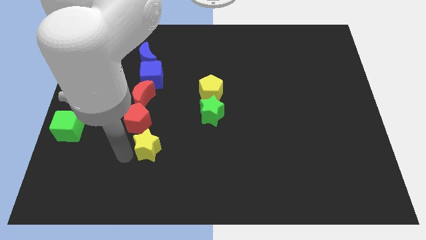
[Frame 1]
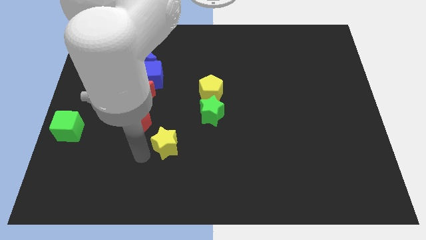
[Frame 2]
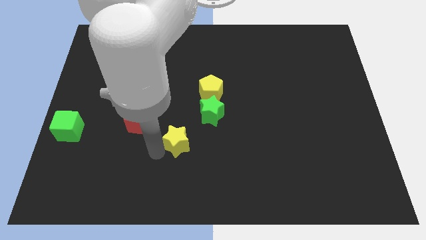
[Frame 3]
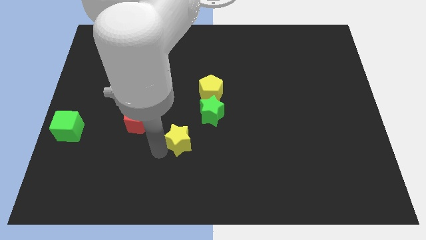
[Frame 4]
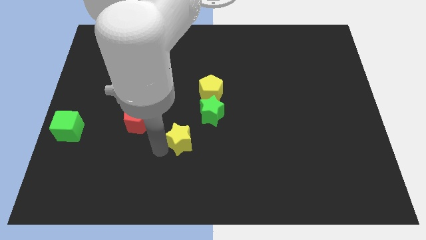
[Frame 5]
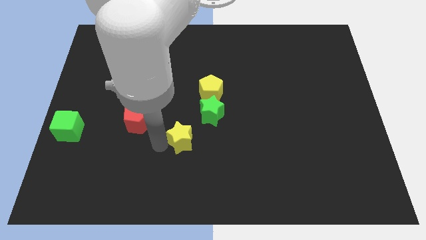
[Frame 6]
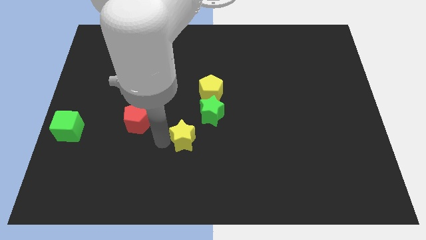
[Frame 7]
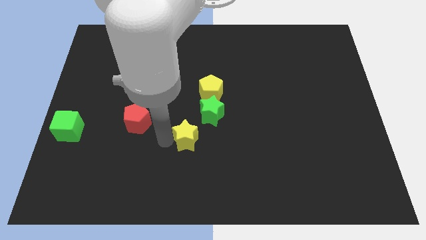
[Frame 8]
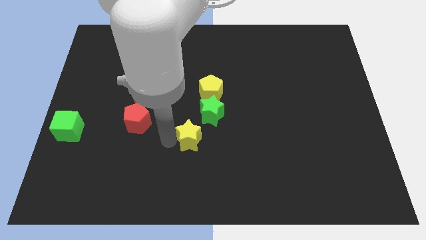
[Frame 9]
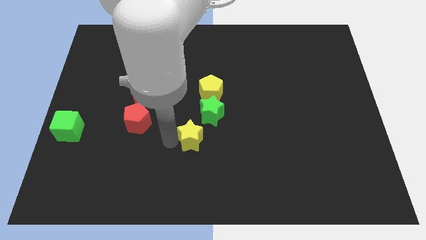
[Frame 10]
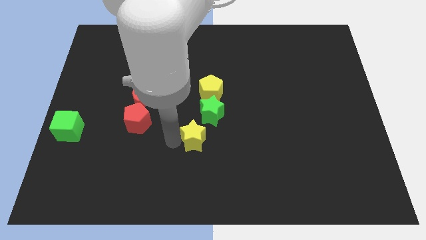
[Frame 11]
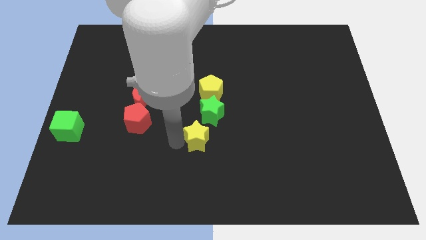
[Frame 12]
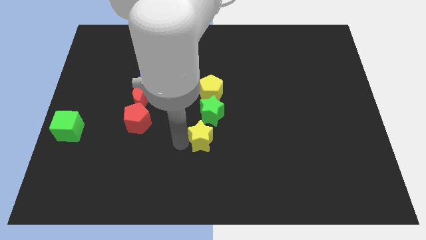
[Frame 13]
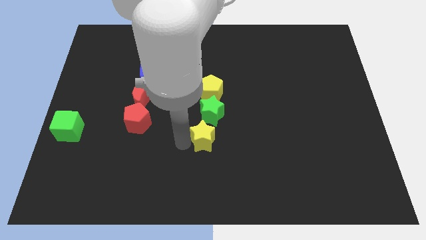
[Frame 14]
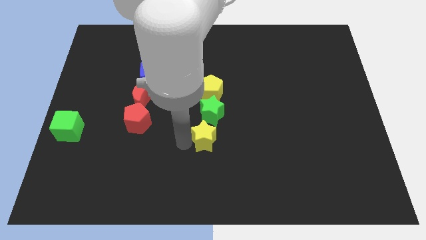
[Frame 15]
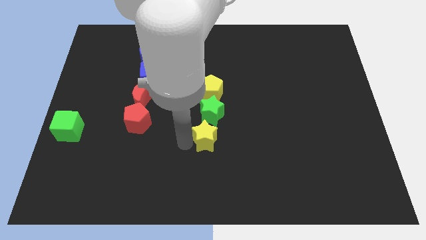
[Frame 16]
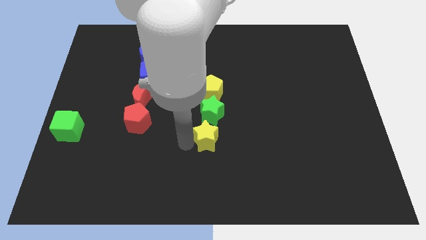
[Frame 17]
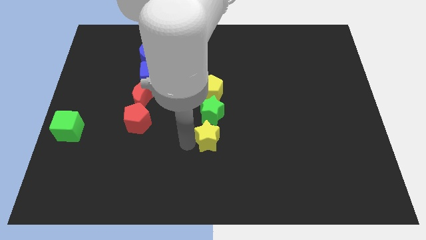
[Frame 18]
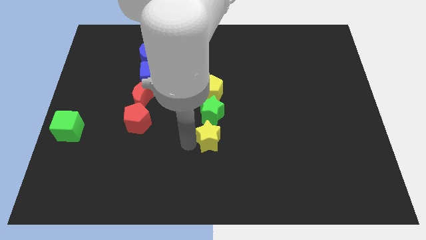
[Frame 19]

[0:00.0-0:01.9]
slide the yellow star slightly to the right

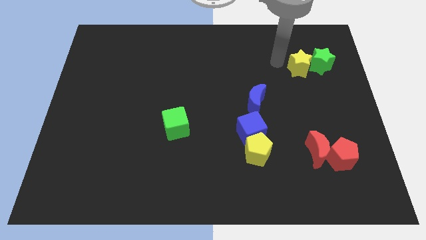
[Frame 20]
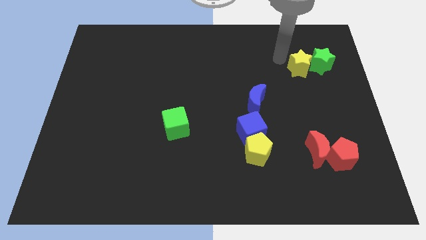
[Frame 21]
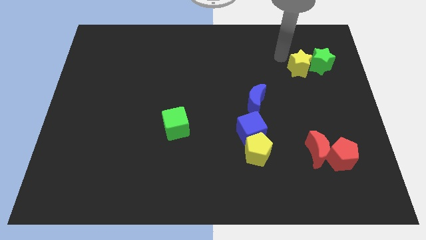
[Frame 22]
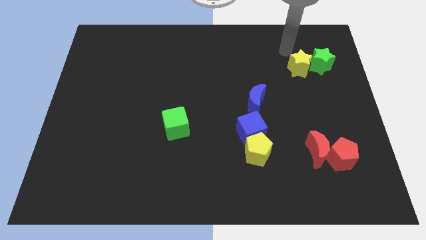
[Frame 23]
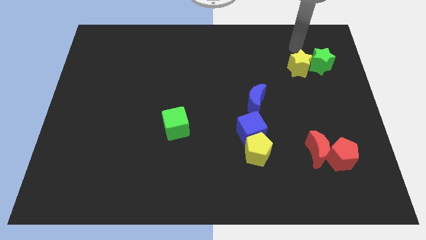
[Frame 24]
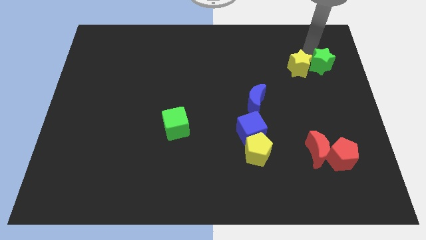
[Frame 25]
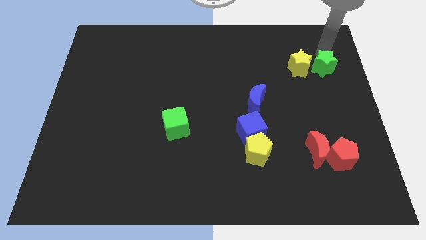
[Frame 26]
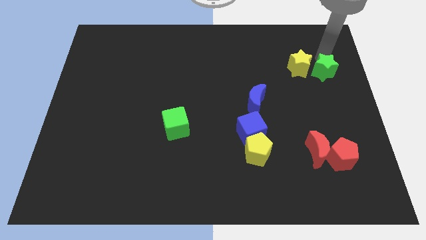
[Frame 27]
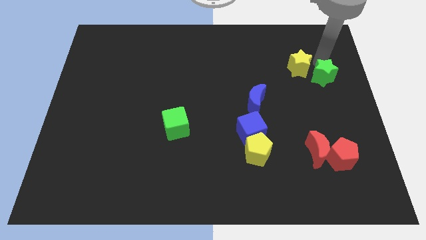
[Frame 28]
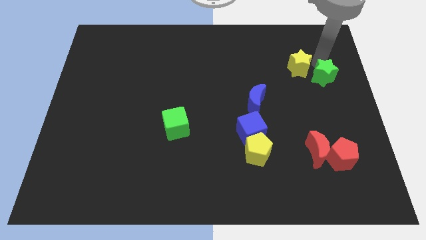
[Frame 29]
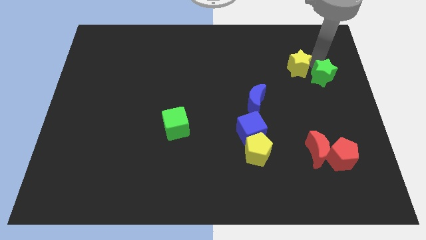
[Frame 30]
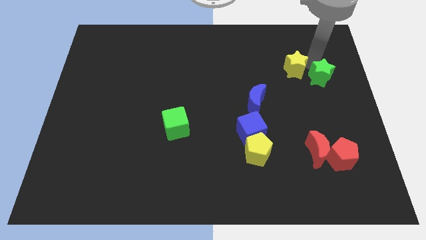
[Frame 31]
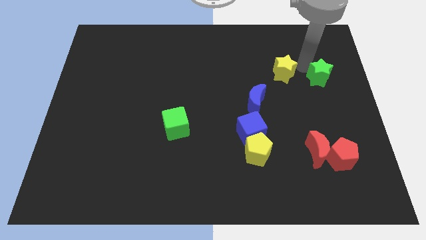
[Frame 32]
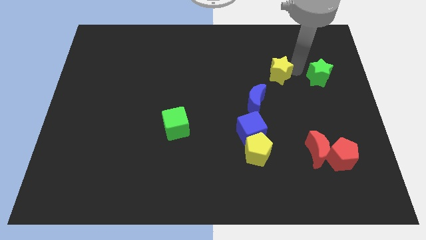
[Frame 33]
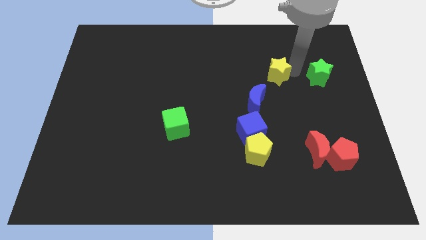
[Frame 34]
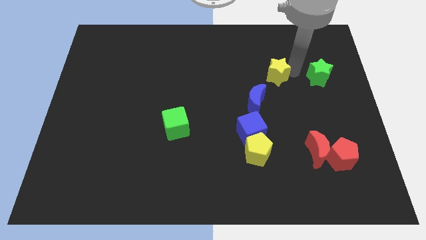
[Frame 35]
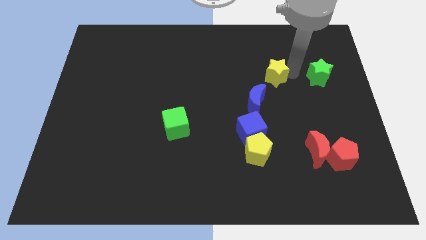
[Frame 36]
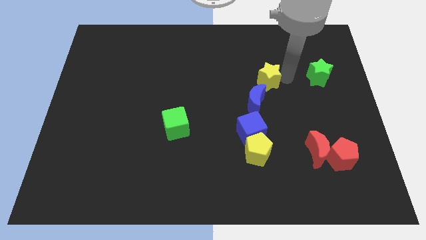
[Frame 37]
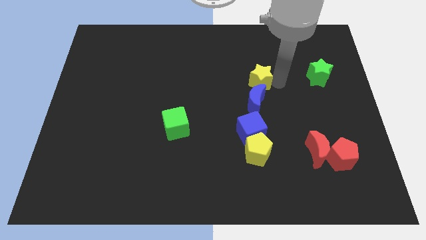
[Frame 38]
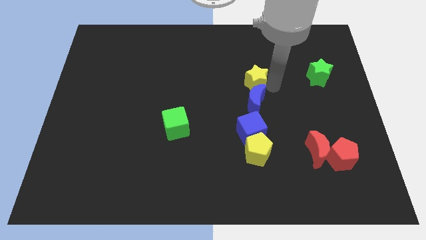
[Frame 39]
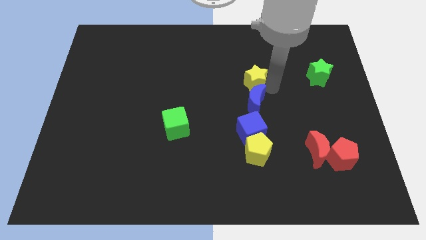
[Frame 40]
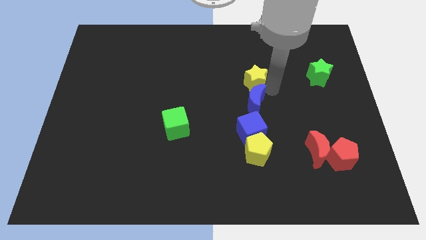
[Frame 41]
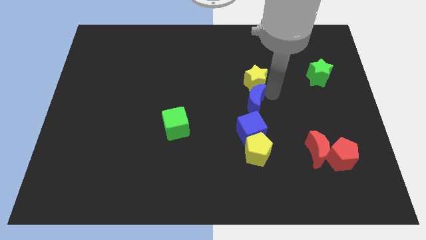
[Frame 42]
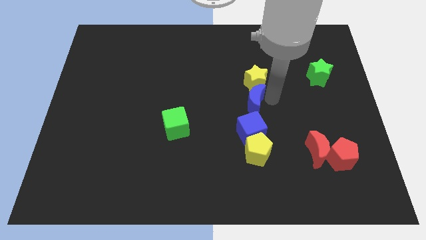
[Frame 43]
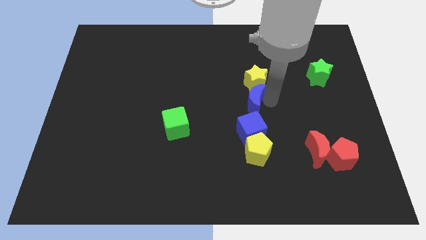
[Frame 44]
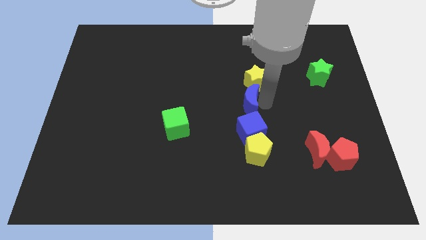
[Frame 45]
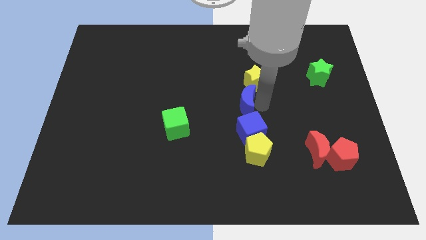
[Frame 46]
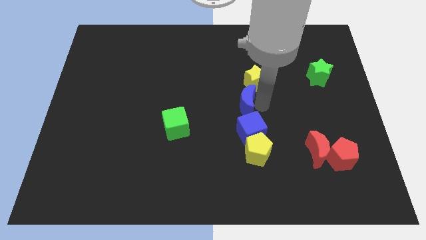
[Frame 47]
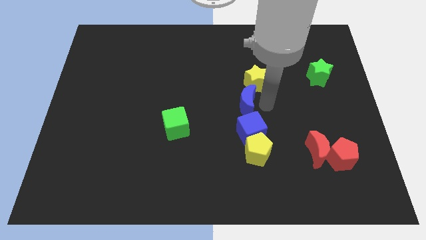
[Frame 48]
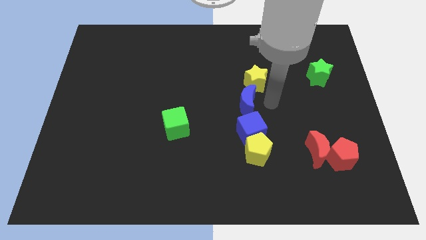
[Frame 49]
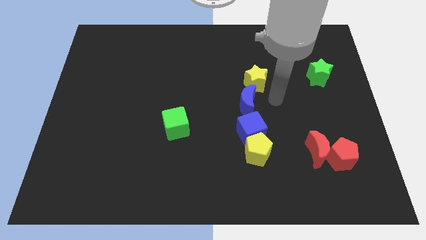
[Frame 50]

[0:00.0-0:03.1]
push the yellow star towards the blue crescent

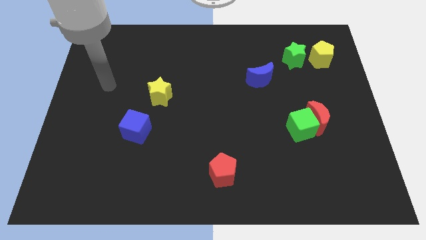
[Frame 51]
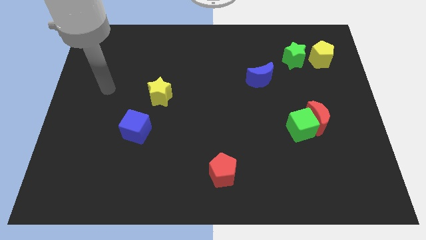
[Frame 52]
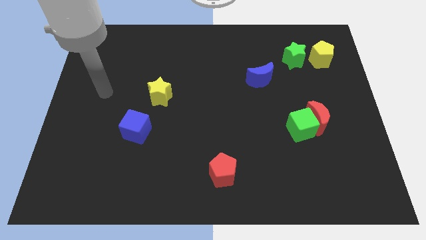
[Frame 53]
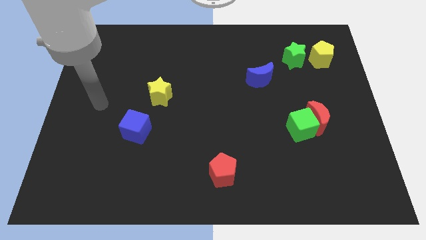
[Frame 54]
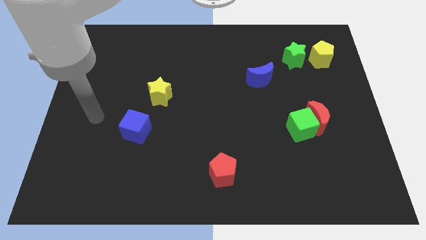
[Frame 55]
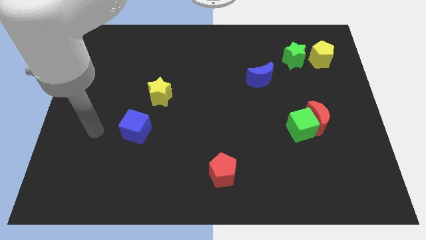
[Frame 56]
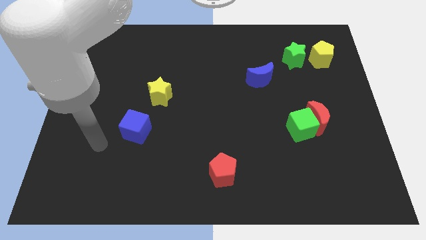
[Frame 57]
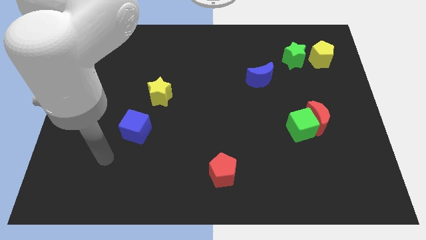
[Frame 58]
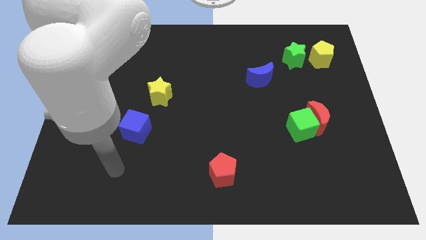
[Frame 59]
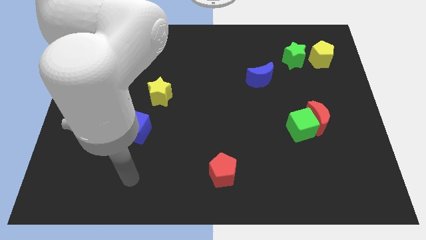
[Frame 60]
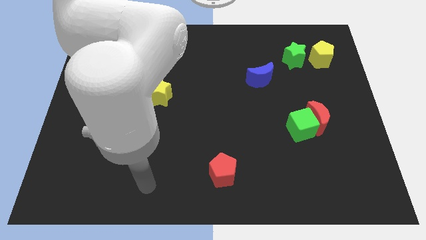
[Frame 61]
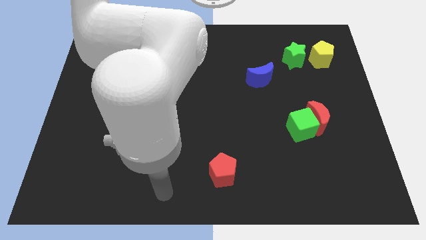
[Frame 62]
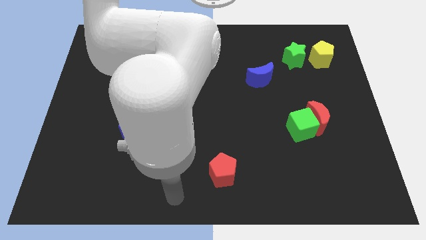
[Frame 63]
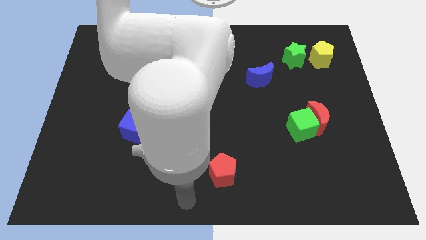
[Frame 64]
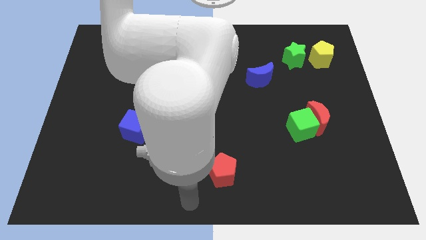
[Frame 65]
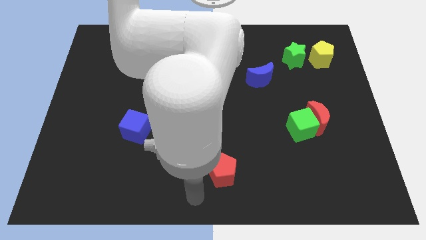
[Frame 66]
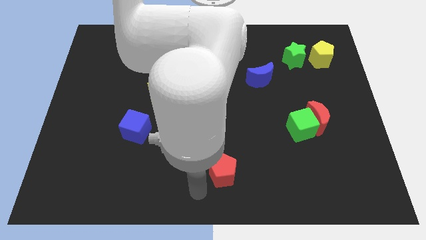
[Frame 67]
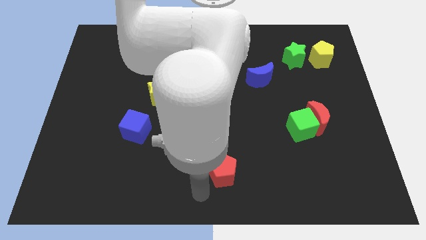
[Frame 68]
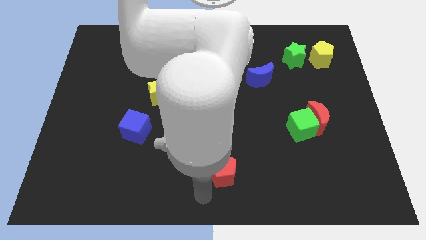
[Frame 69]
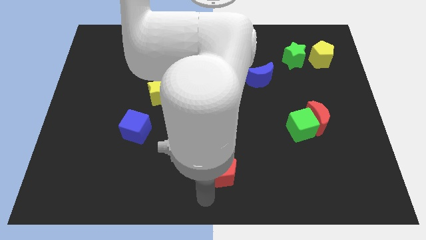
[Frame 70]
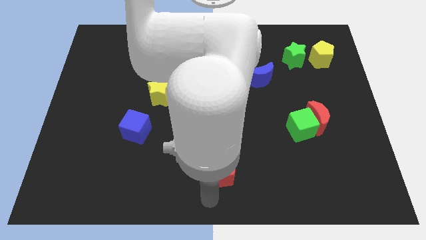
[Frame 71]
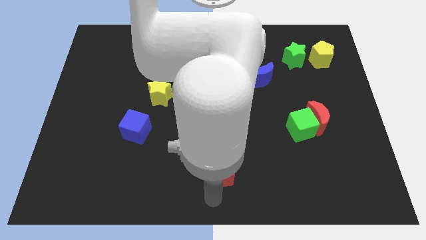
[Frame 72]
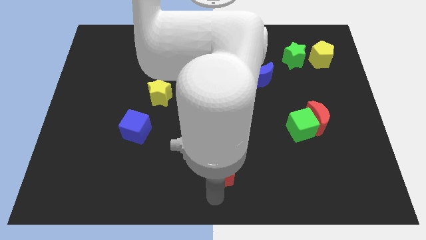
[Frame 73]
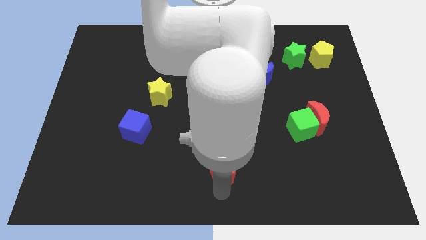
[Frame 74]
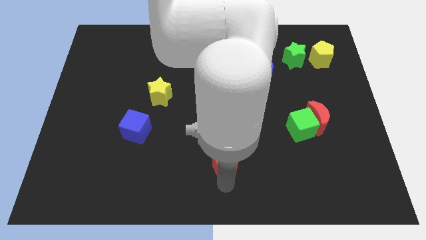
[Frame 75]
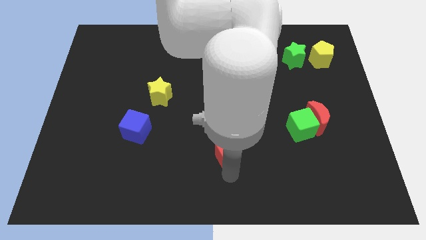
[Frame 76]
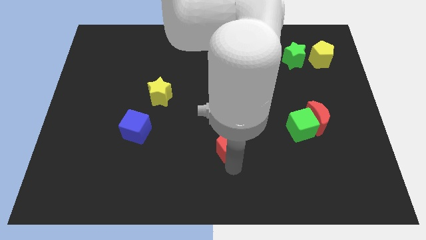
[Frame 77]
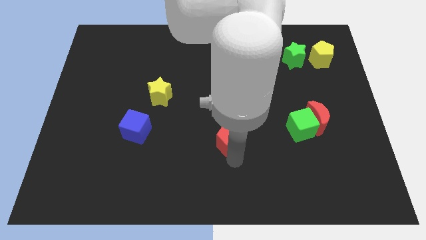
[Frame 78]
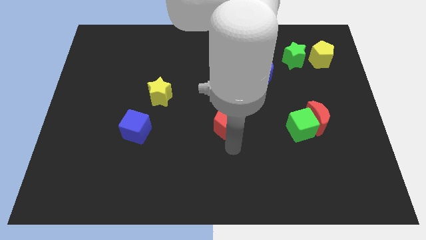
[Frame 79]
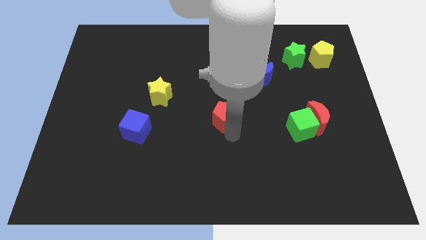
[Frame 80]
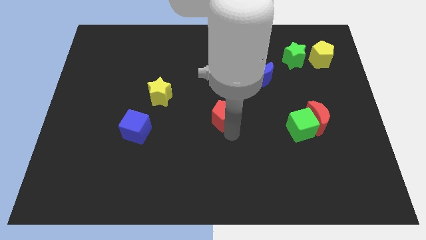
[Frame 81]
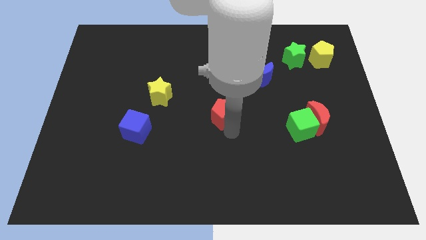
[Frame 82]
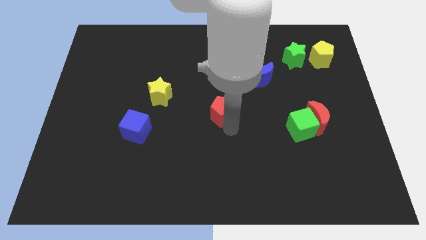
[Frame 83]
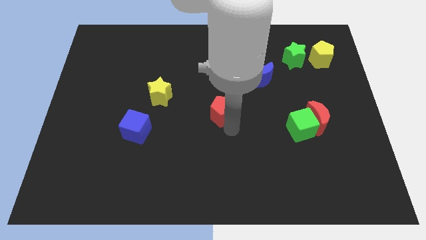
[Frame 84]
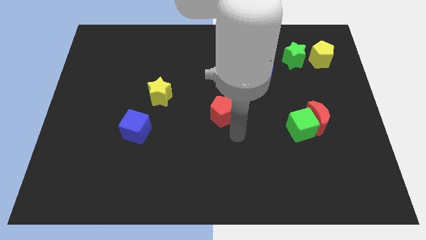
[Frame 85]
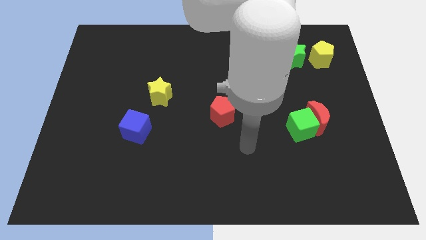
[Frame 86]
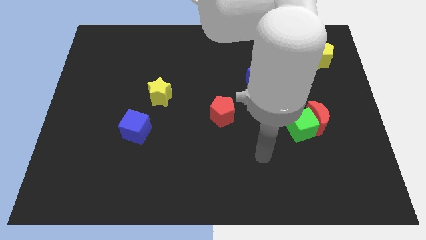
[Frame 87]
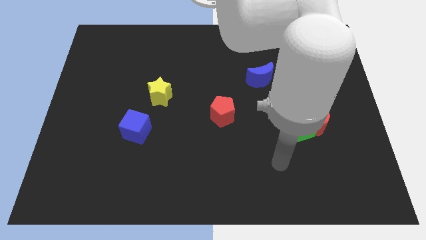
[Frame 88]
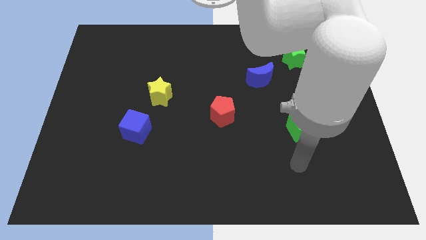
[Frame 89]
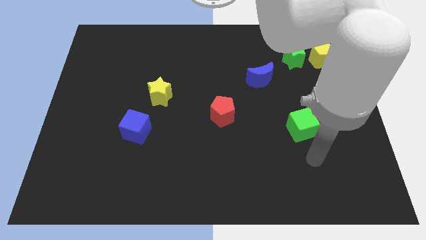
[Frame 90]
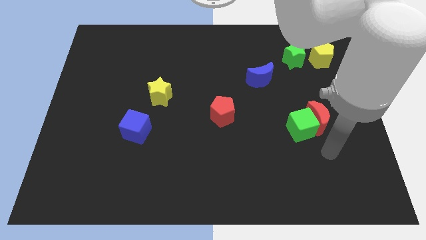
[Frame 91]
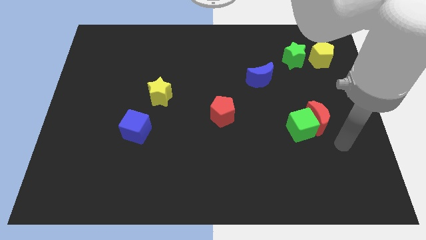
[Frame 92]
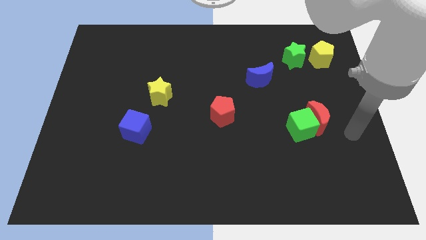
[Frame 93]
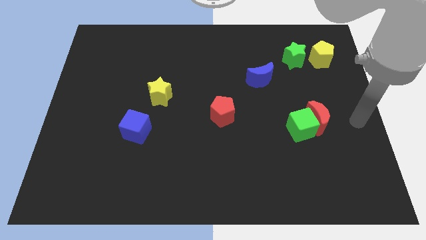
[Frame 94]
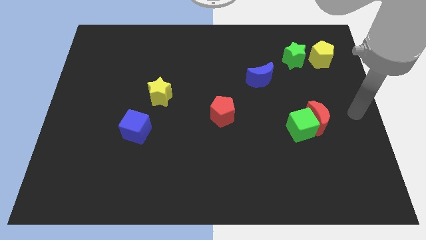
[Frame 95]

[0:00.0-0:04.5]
push the red pentagon towards the center of the board
